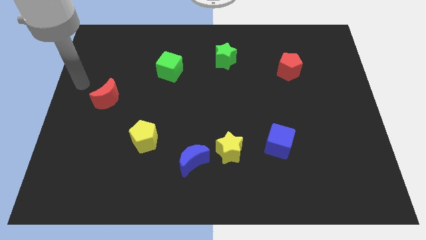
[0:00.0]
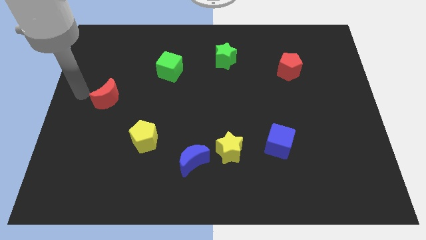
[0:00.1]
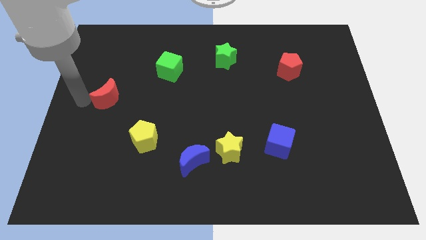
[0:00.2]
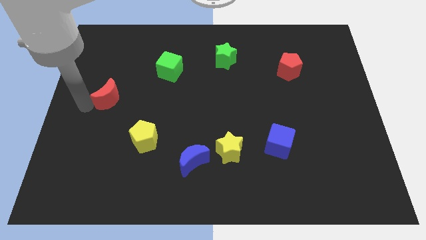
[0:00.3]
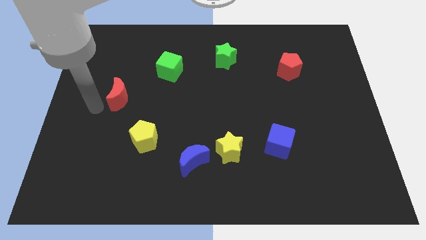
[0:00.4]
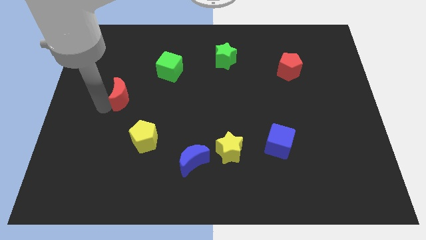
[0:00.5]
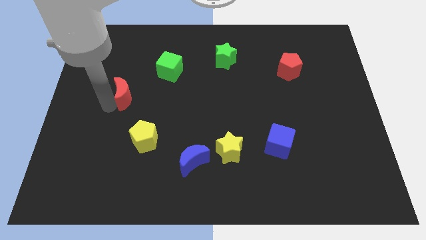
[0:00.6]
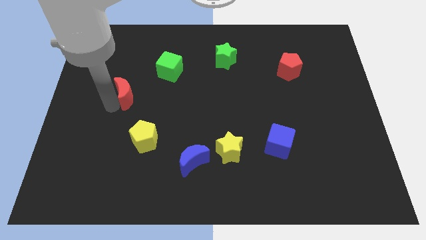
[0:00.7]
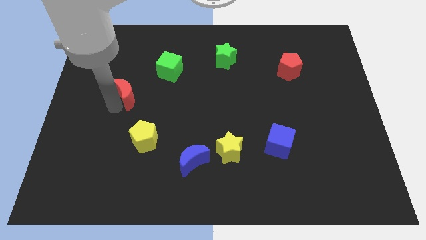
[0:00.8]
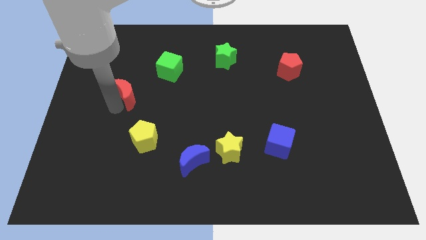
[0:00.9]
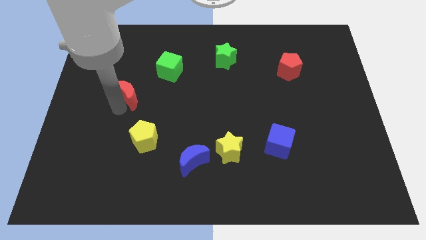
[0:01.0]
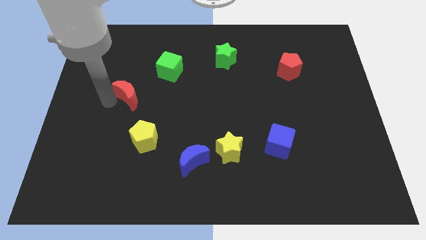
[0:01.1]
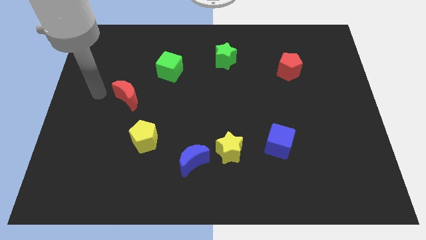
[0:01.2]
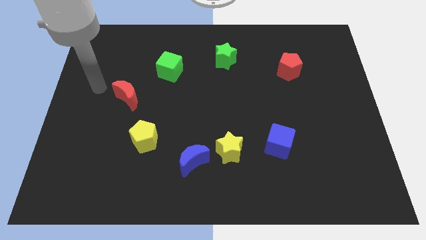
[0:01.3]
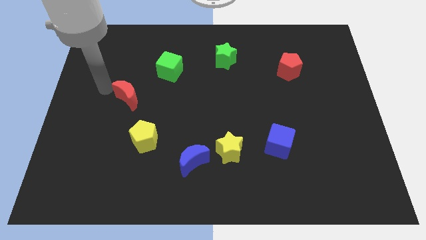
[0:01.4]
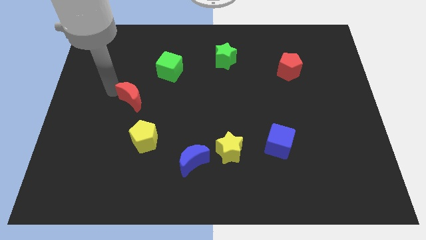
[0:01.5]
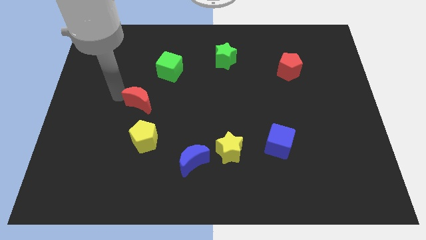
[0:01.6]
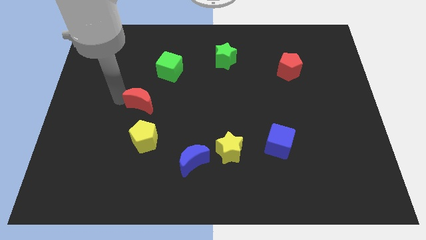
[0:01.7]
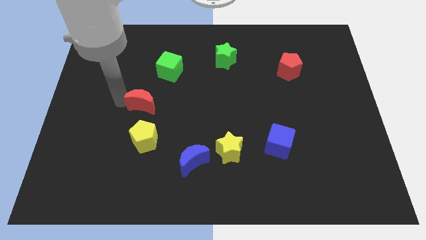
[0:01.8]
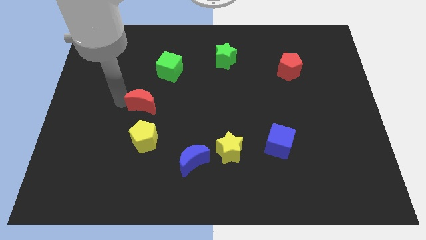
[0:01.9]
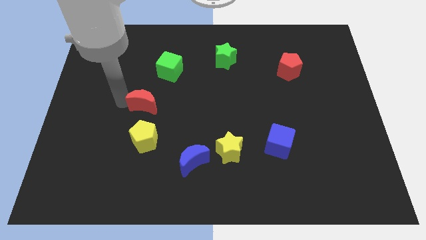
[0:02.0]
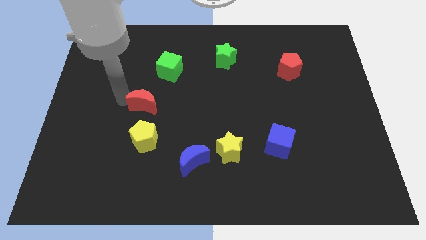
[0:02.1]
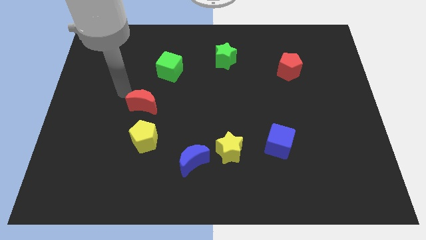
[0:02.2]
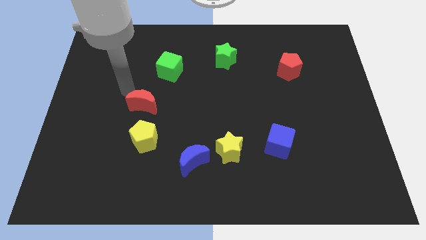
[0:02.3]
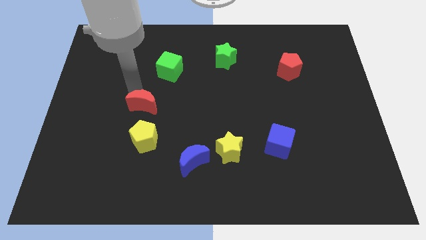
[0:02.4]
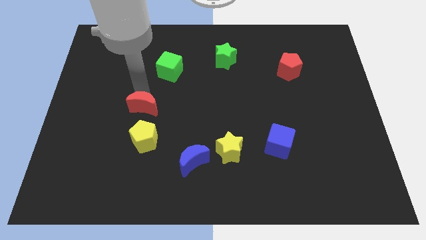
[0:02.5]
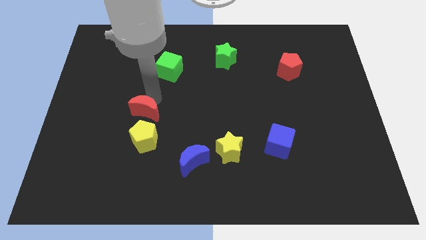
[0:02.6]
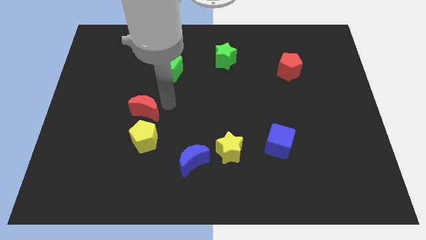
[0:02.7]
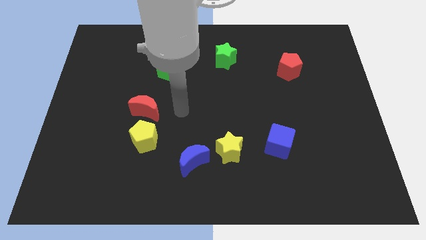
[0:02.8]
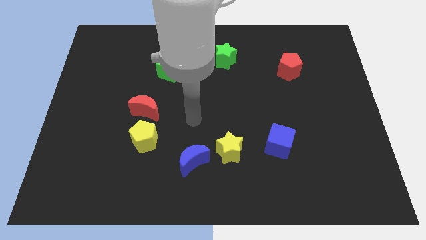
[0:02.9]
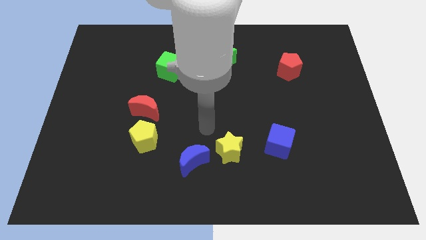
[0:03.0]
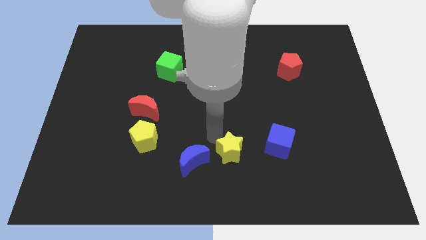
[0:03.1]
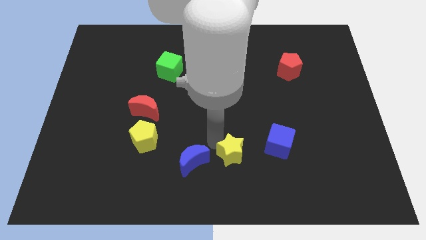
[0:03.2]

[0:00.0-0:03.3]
place the red crescent above the yellow pentagon

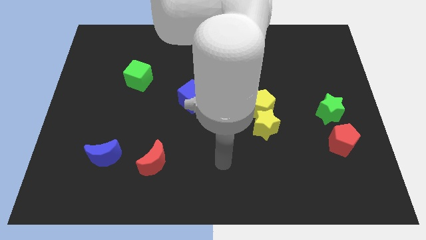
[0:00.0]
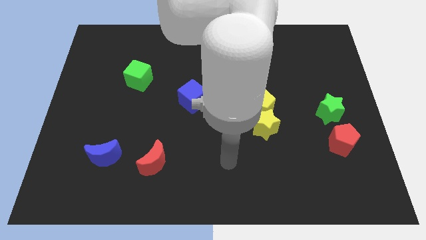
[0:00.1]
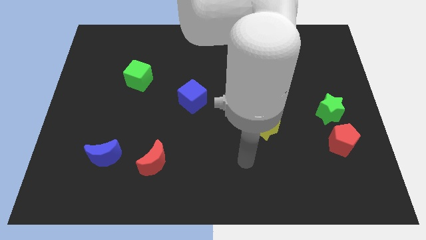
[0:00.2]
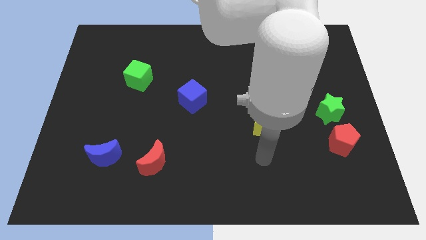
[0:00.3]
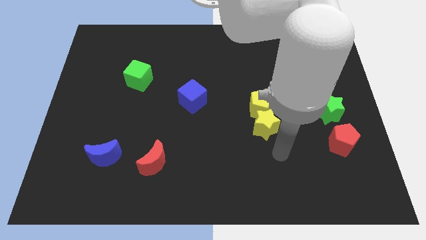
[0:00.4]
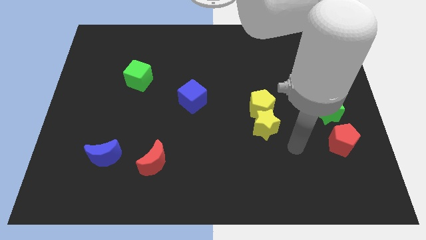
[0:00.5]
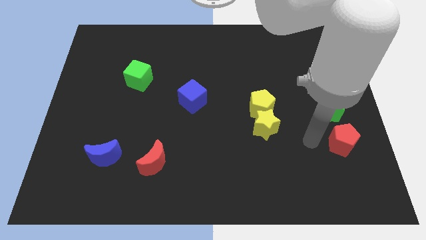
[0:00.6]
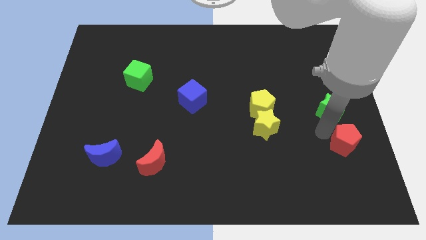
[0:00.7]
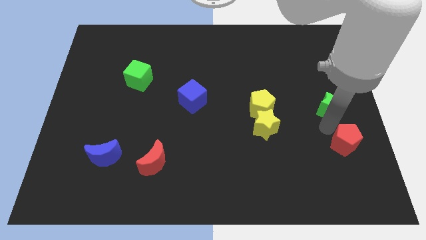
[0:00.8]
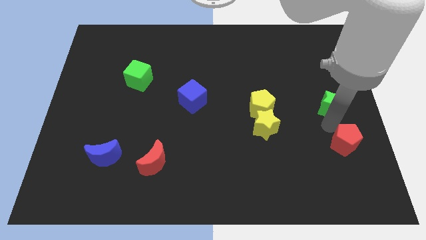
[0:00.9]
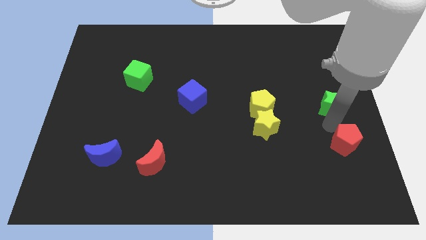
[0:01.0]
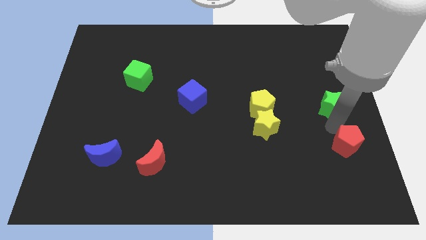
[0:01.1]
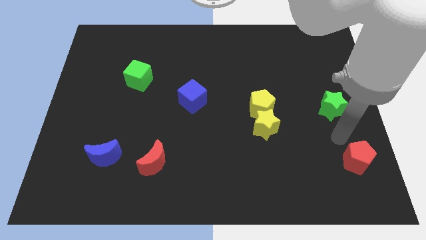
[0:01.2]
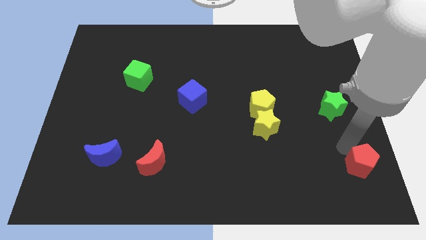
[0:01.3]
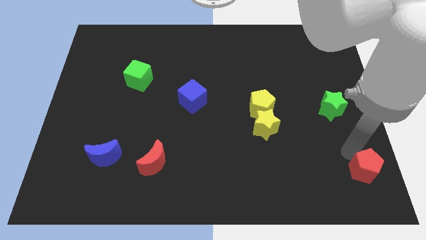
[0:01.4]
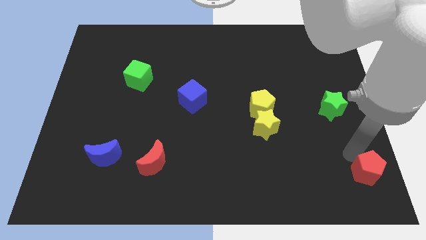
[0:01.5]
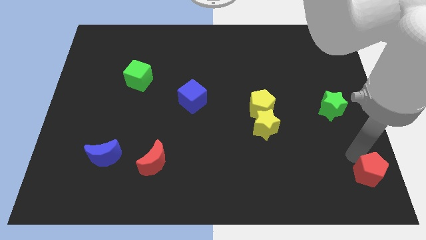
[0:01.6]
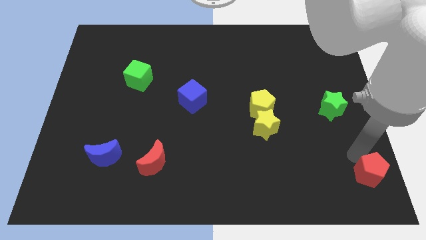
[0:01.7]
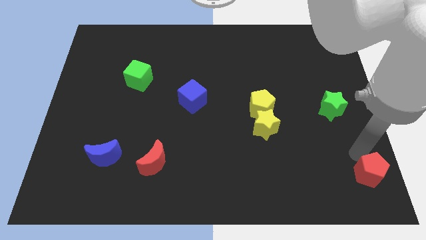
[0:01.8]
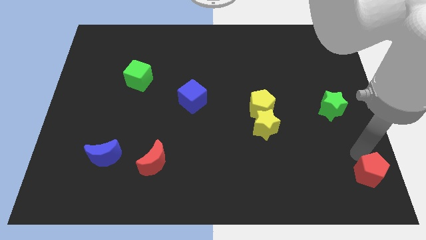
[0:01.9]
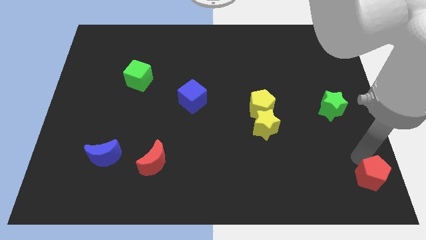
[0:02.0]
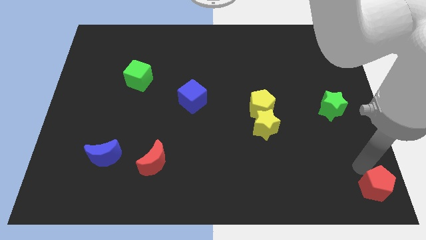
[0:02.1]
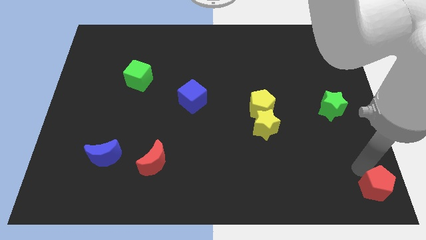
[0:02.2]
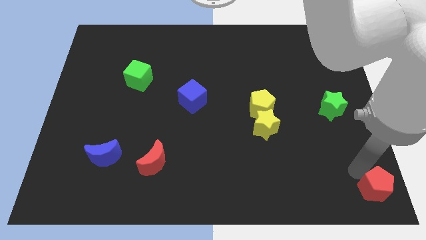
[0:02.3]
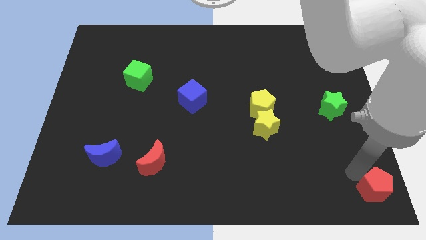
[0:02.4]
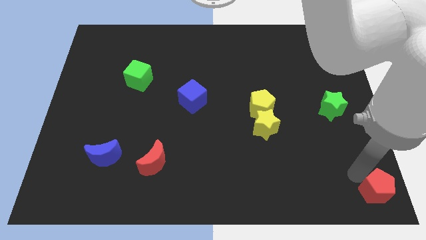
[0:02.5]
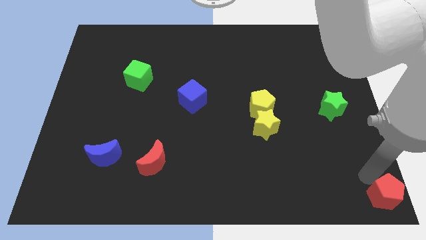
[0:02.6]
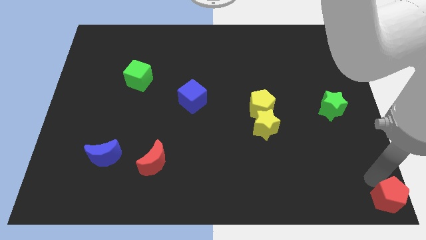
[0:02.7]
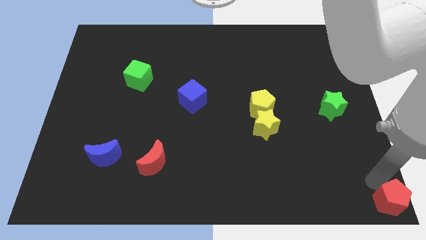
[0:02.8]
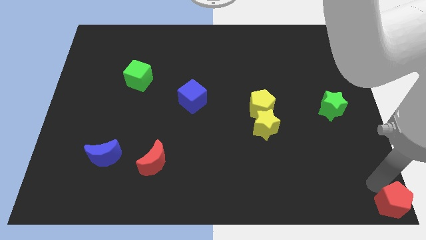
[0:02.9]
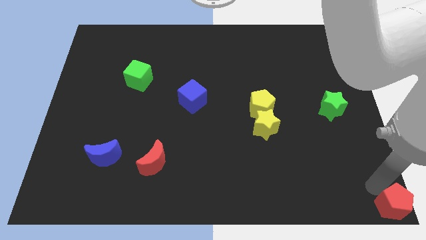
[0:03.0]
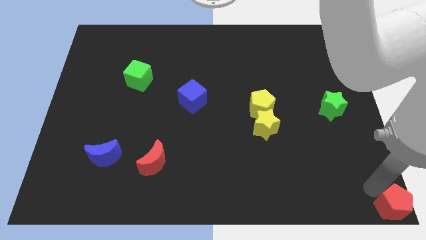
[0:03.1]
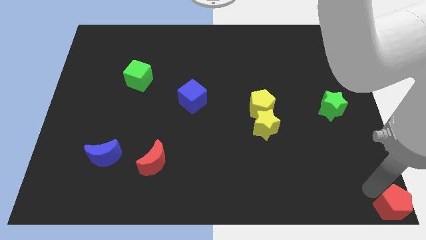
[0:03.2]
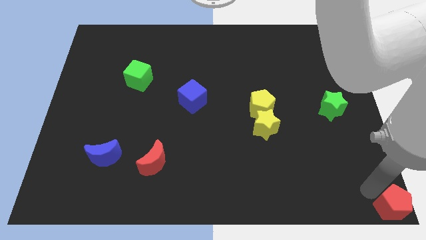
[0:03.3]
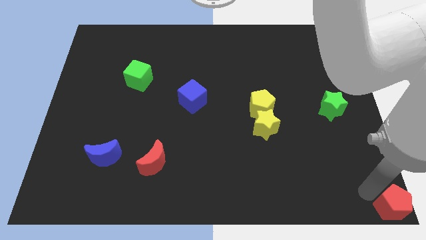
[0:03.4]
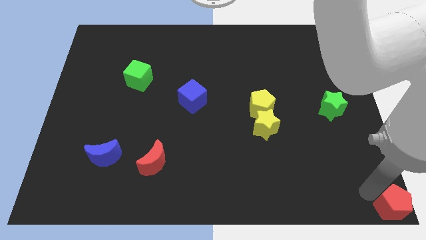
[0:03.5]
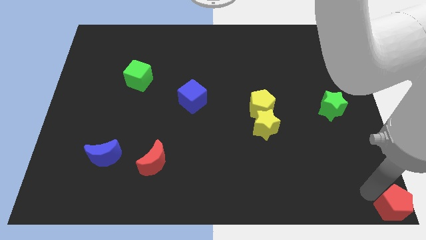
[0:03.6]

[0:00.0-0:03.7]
move the red pentagon to the bottom right

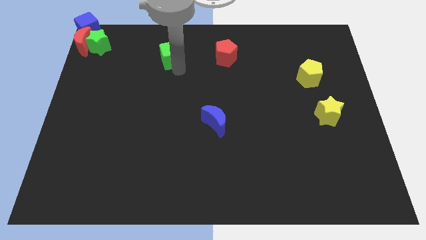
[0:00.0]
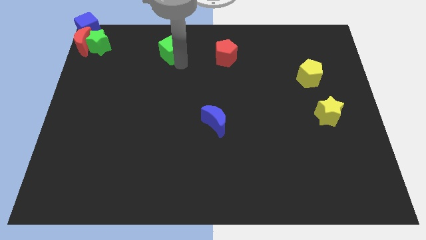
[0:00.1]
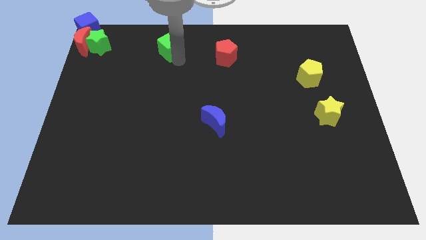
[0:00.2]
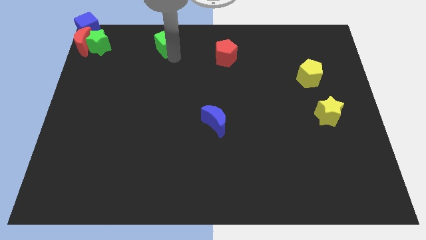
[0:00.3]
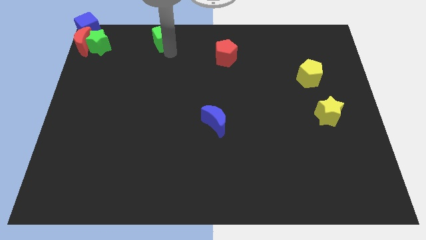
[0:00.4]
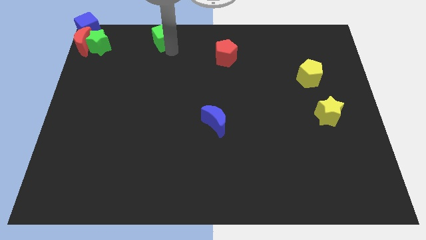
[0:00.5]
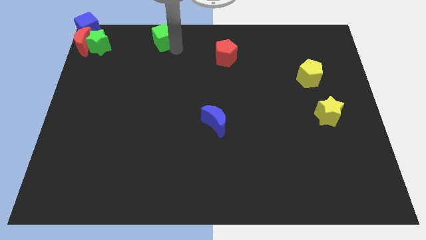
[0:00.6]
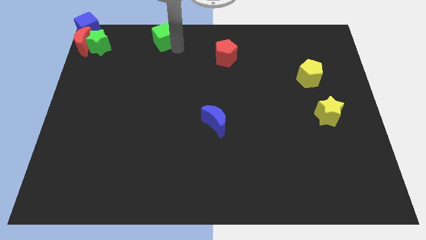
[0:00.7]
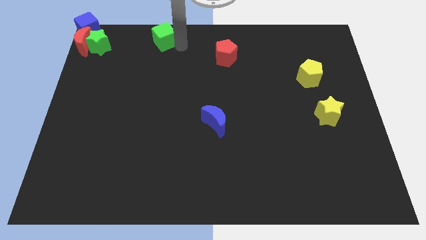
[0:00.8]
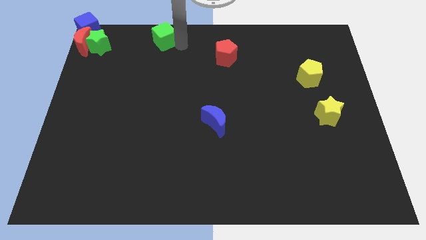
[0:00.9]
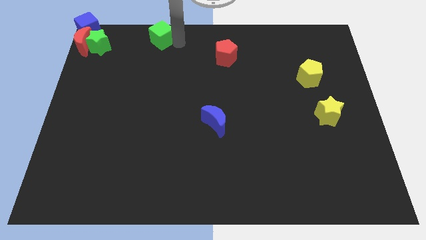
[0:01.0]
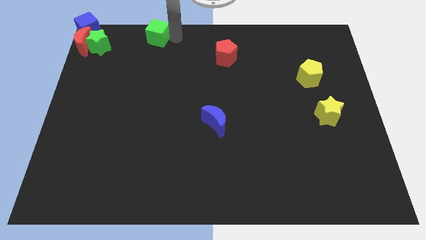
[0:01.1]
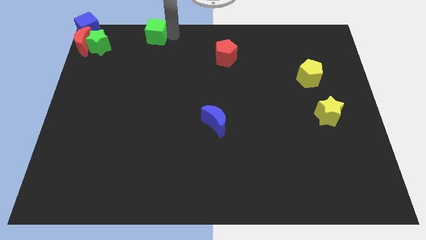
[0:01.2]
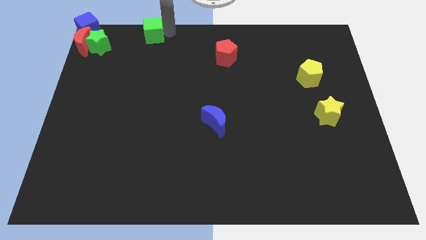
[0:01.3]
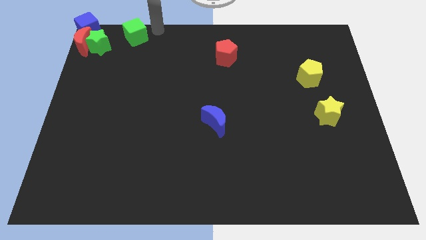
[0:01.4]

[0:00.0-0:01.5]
push the green cube to the top left
